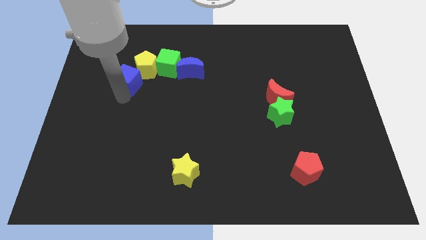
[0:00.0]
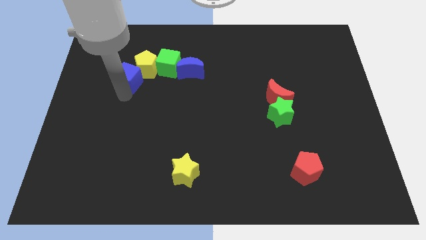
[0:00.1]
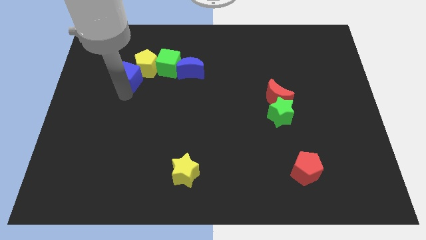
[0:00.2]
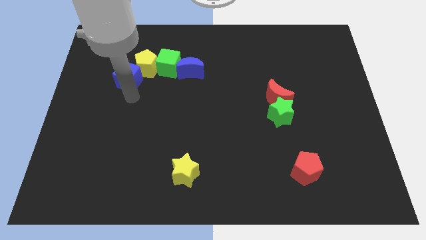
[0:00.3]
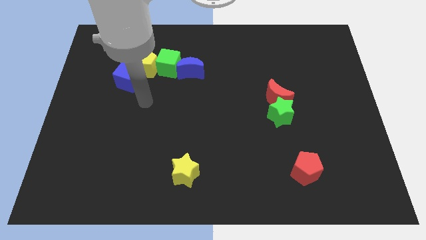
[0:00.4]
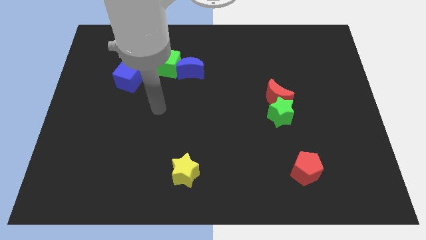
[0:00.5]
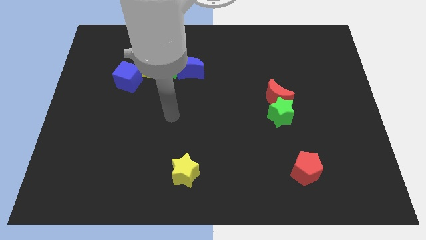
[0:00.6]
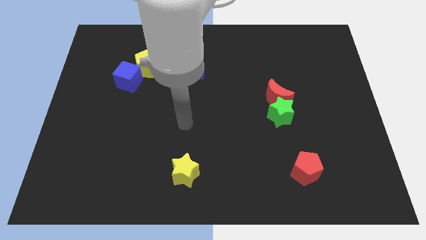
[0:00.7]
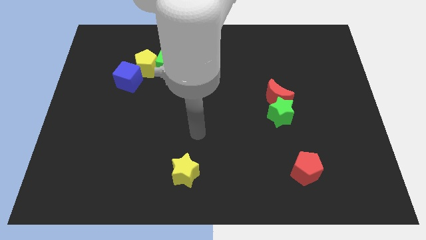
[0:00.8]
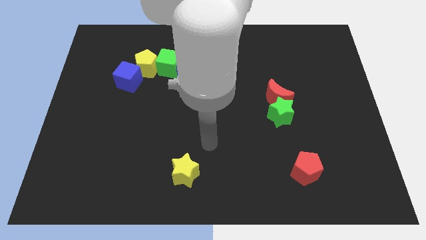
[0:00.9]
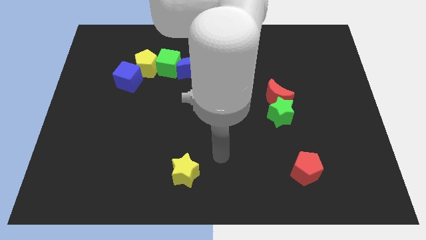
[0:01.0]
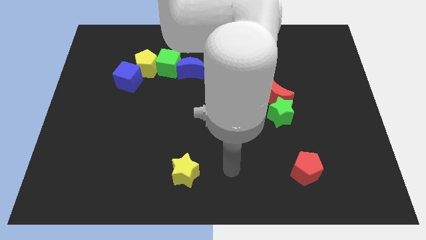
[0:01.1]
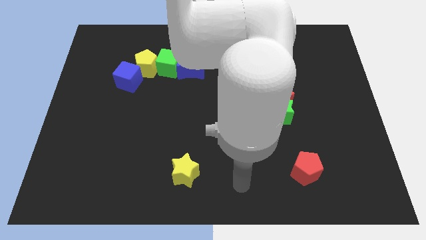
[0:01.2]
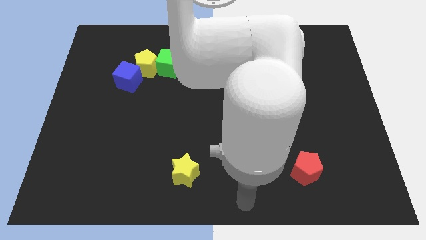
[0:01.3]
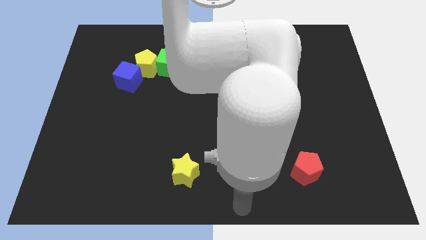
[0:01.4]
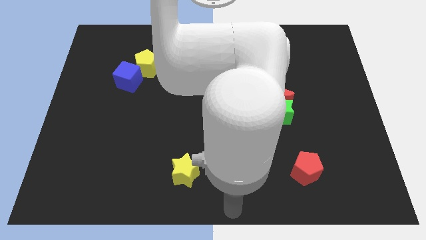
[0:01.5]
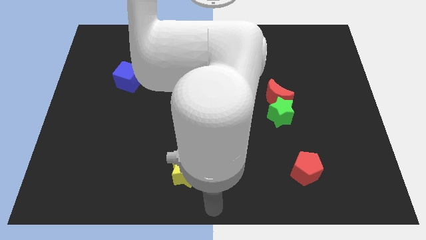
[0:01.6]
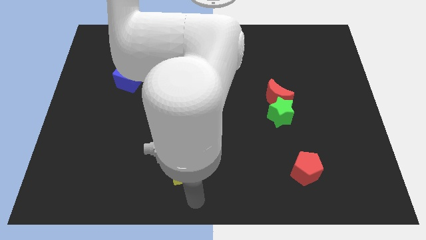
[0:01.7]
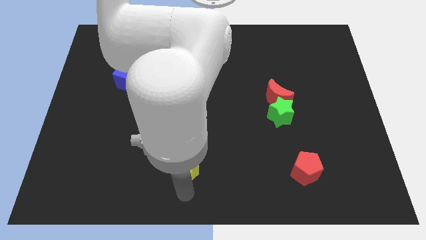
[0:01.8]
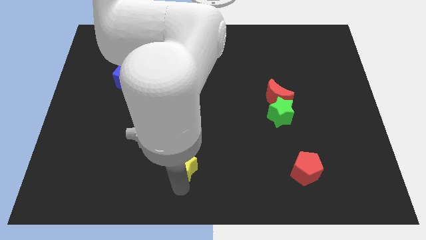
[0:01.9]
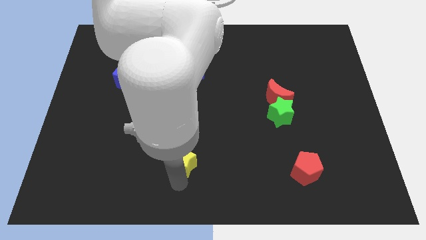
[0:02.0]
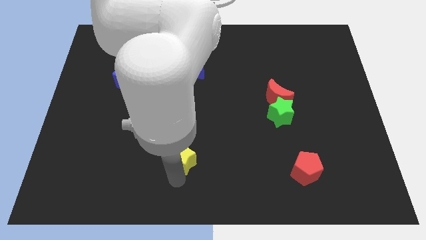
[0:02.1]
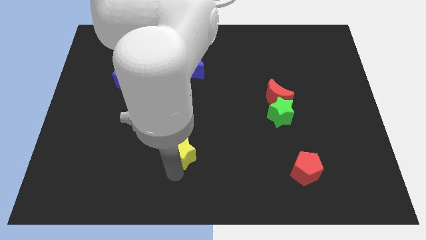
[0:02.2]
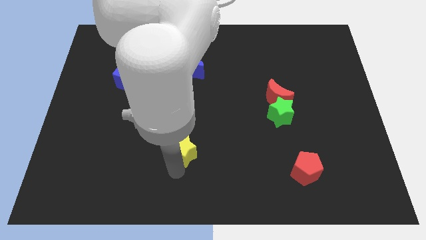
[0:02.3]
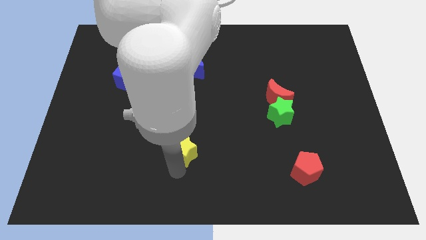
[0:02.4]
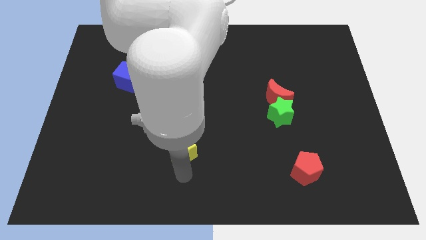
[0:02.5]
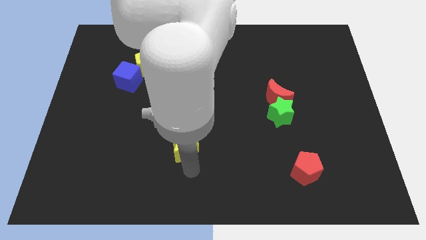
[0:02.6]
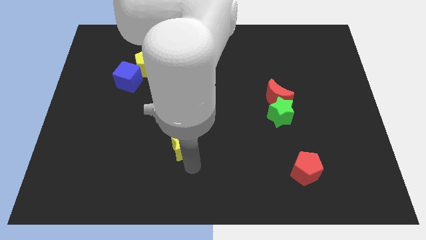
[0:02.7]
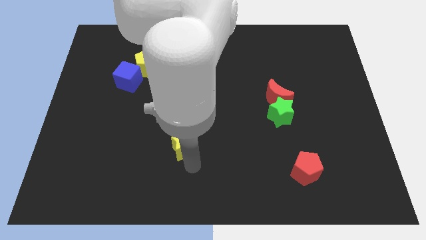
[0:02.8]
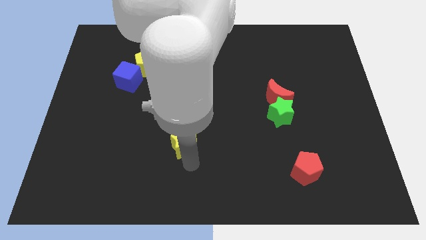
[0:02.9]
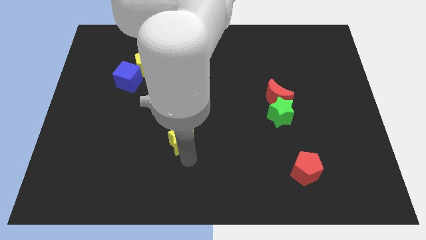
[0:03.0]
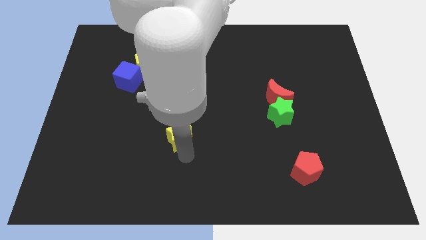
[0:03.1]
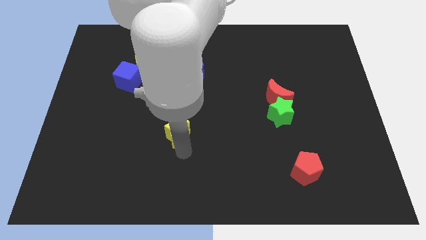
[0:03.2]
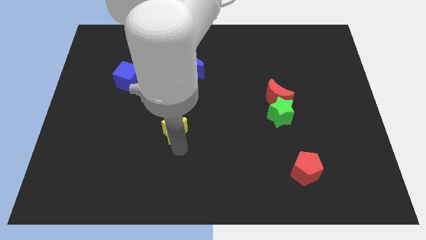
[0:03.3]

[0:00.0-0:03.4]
move the yellow star to the center

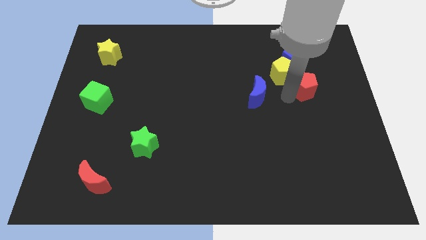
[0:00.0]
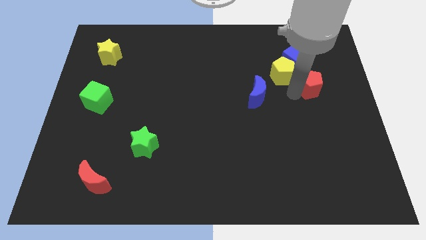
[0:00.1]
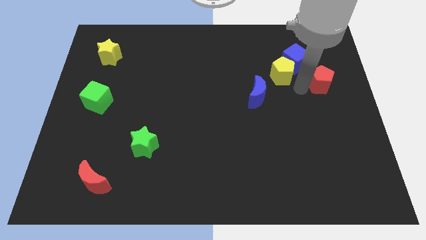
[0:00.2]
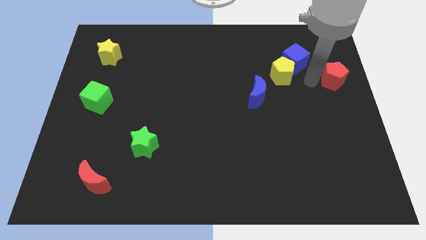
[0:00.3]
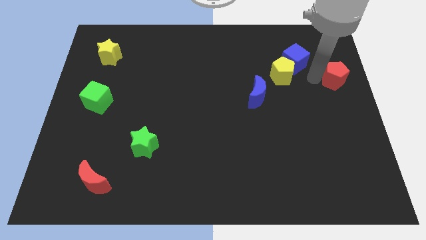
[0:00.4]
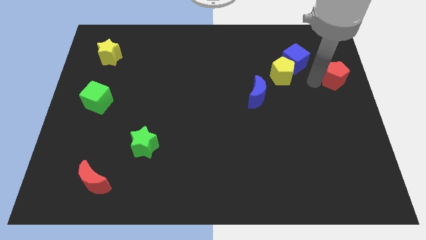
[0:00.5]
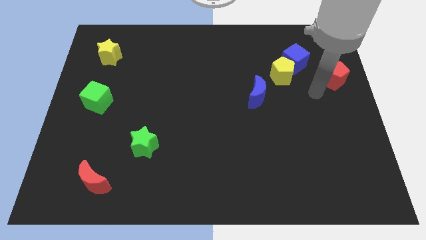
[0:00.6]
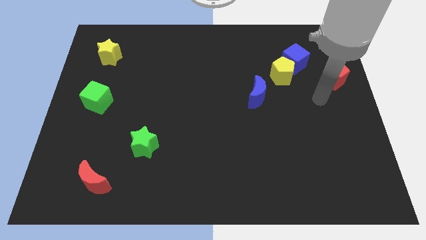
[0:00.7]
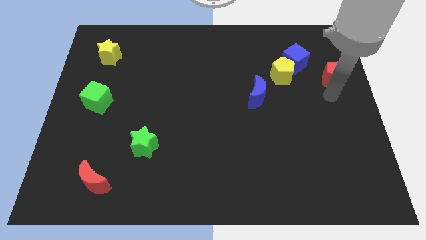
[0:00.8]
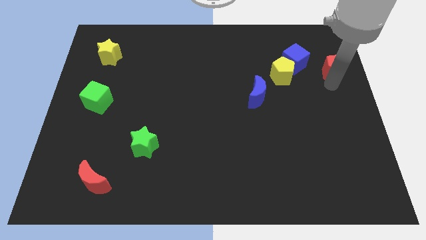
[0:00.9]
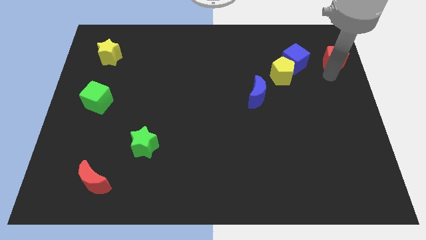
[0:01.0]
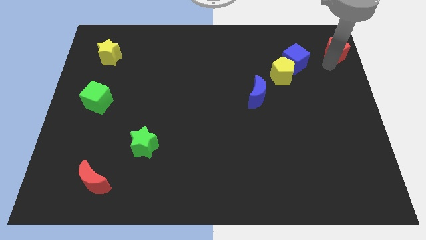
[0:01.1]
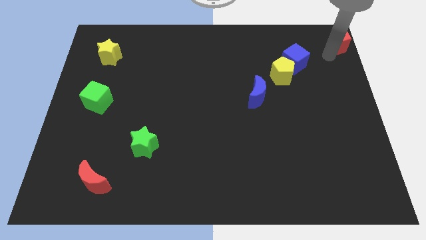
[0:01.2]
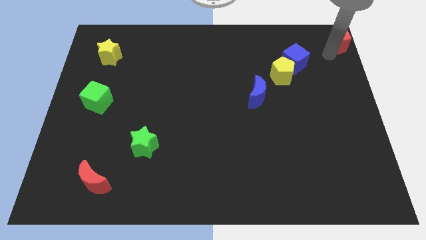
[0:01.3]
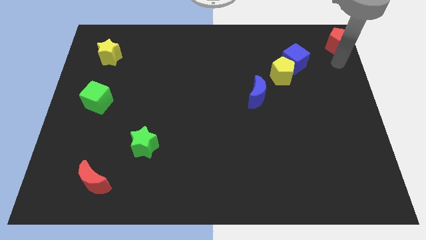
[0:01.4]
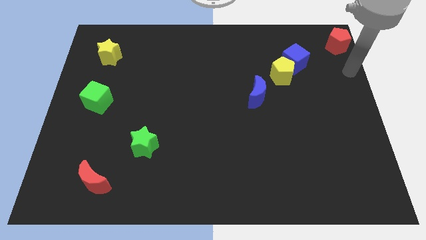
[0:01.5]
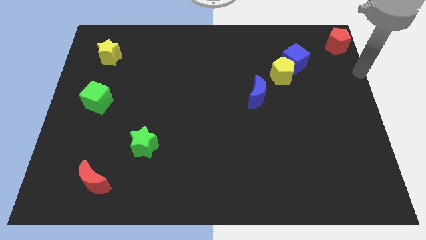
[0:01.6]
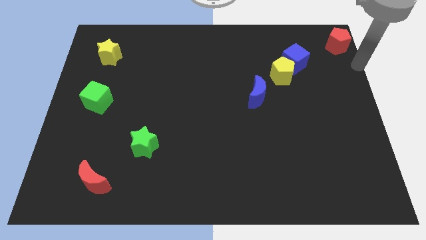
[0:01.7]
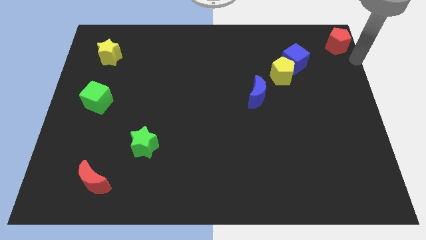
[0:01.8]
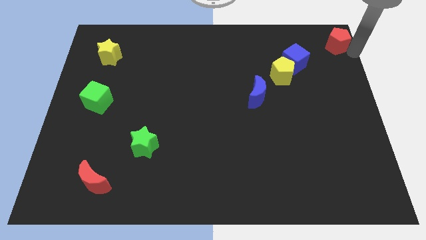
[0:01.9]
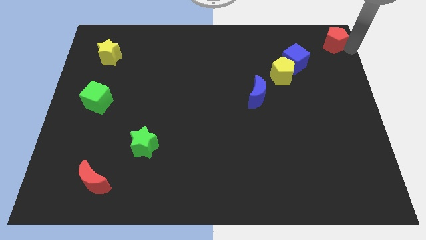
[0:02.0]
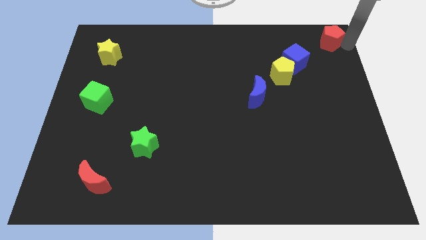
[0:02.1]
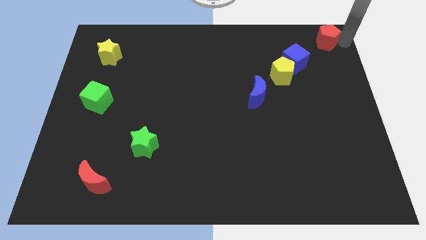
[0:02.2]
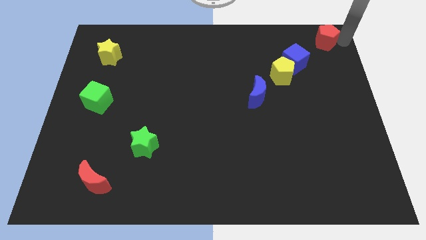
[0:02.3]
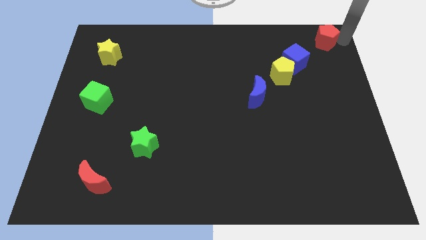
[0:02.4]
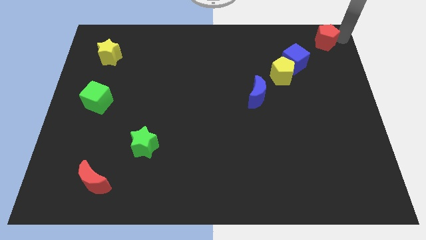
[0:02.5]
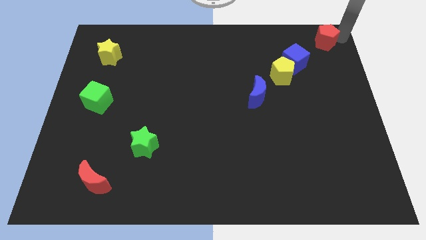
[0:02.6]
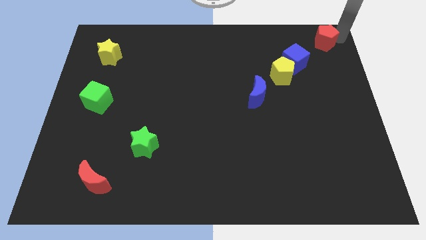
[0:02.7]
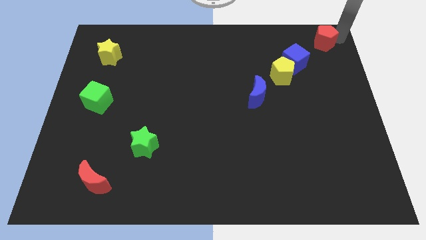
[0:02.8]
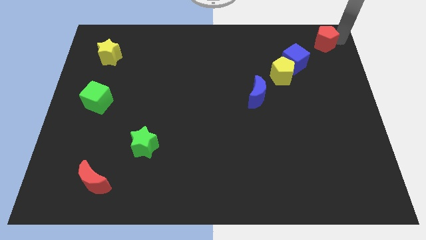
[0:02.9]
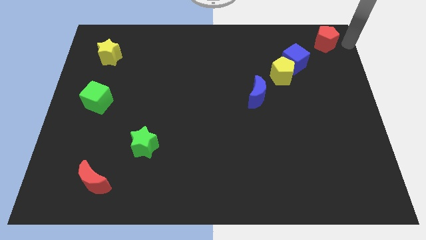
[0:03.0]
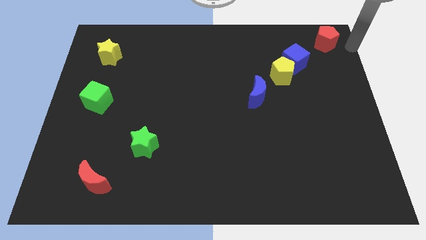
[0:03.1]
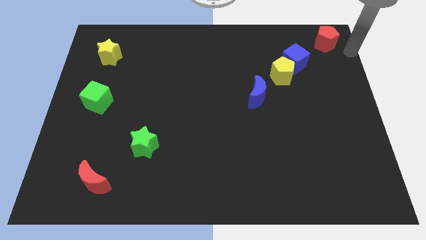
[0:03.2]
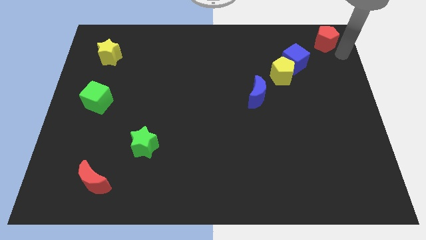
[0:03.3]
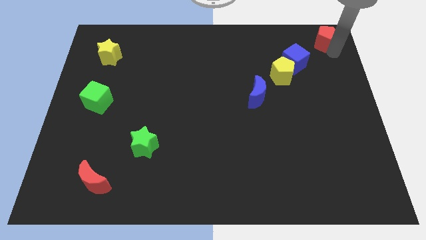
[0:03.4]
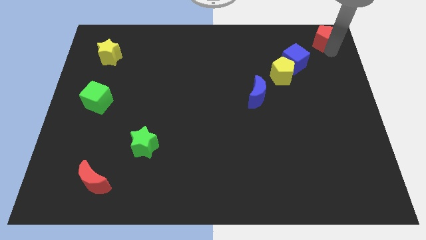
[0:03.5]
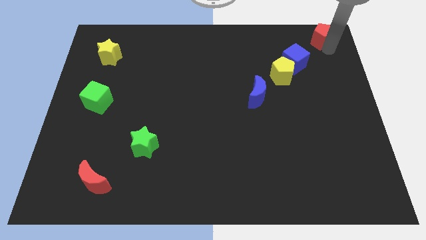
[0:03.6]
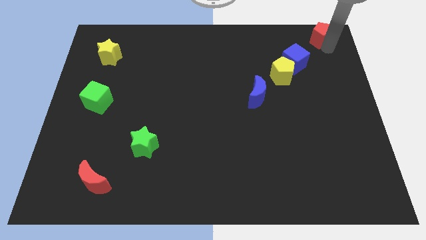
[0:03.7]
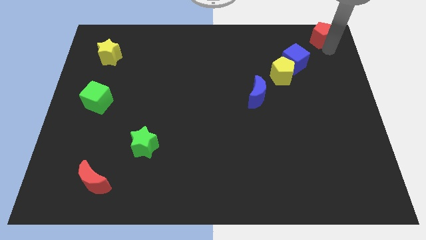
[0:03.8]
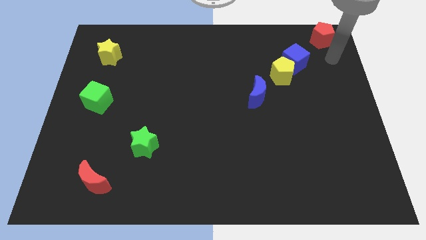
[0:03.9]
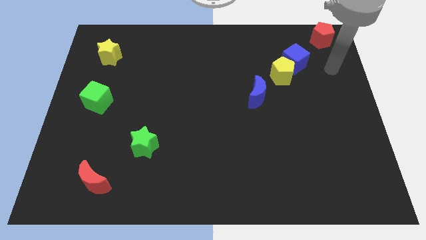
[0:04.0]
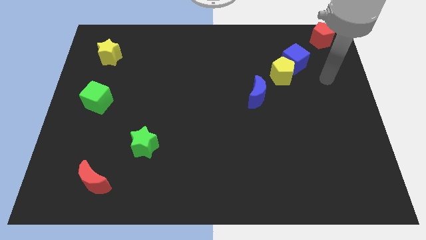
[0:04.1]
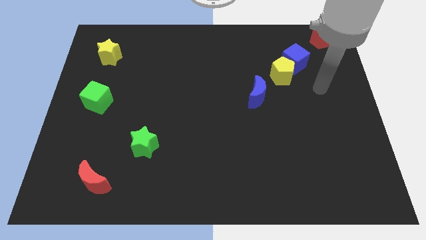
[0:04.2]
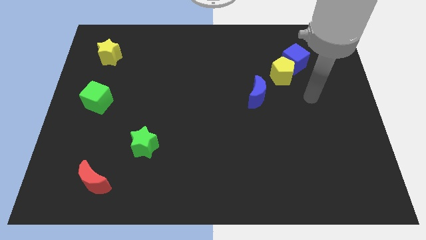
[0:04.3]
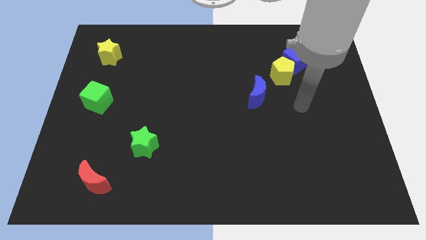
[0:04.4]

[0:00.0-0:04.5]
place the red pentagon to the top right of board

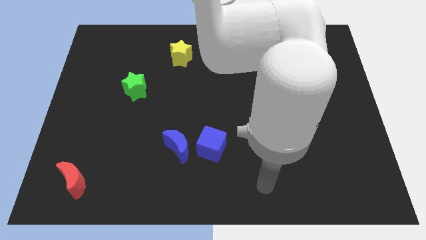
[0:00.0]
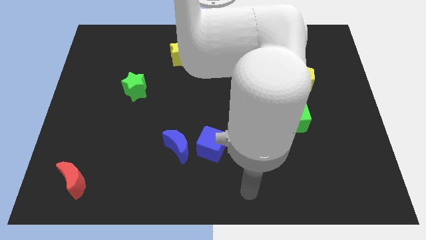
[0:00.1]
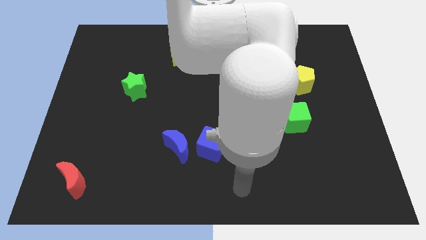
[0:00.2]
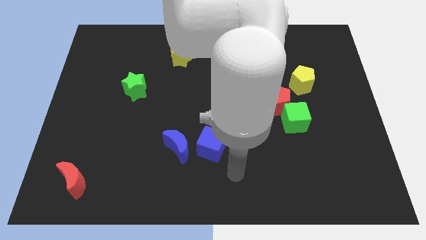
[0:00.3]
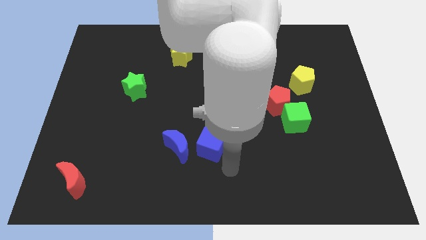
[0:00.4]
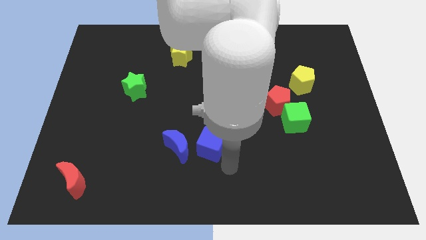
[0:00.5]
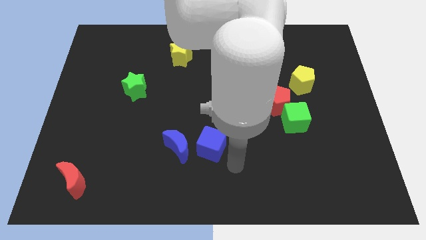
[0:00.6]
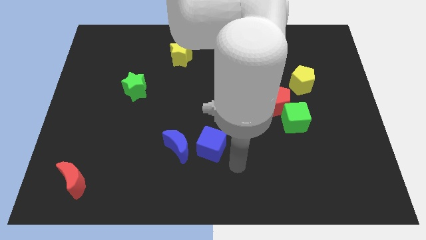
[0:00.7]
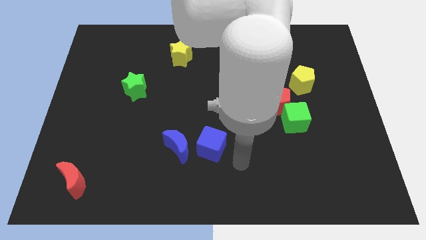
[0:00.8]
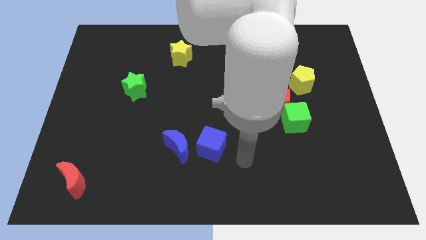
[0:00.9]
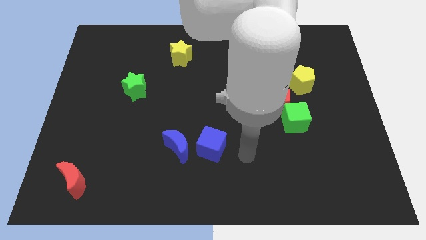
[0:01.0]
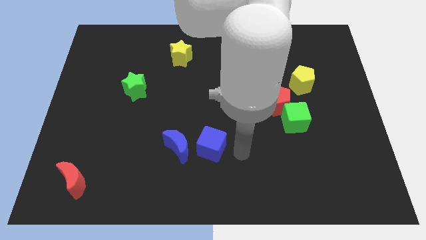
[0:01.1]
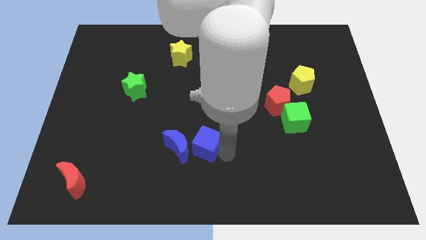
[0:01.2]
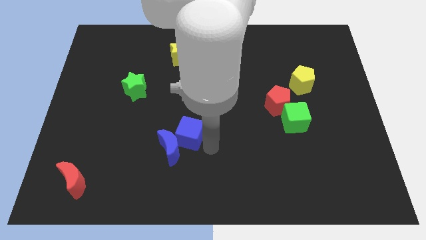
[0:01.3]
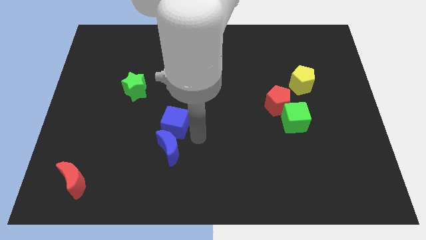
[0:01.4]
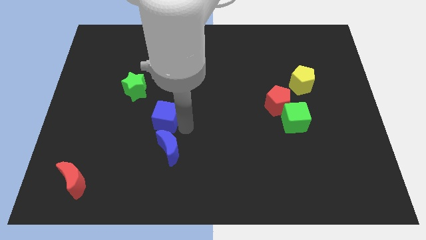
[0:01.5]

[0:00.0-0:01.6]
push the blue cube into the blue moon
